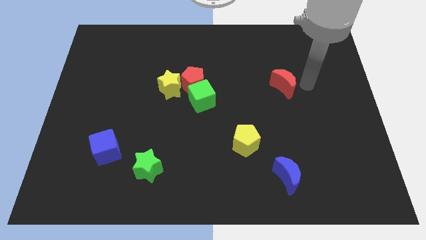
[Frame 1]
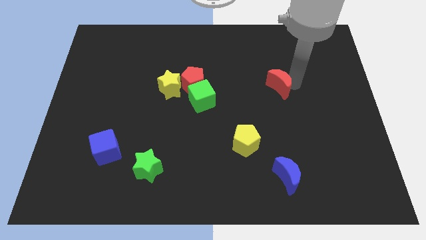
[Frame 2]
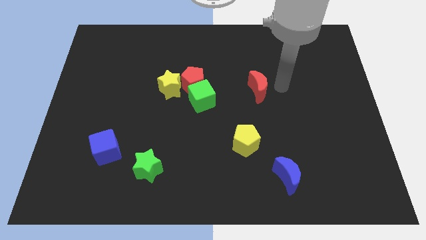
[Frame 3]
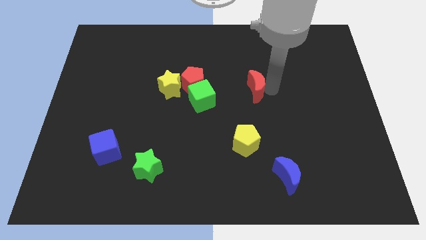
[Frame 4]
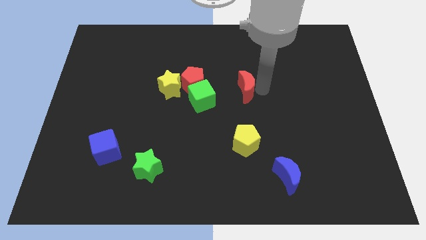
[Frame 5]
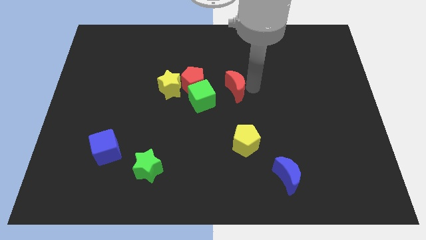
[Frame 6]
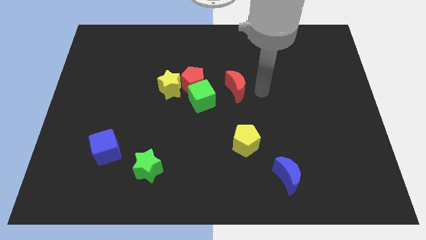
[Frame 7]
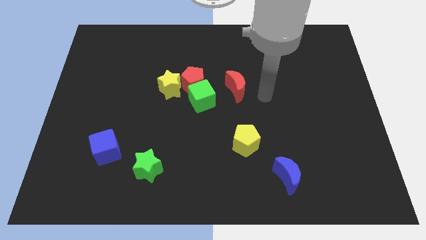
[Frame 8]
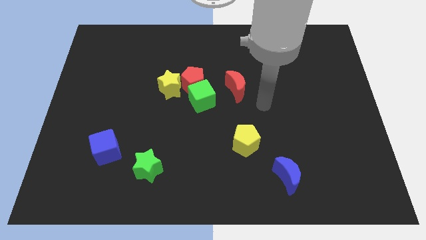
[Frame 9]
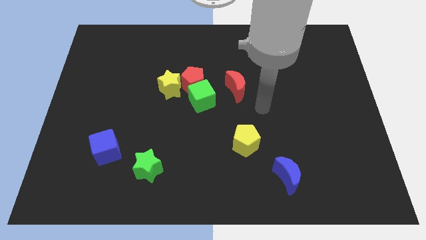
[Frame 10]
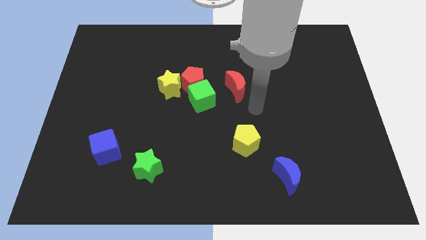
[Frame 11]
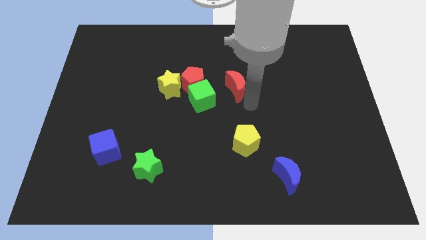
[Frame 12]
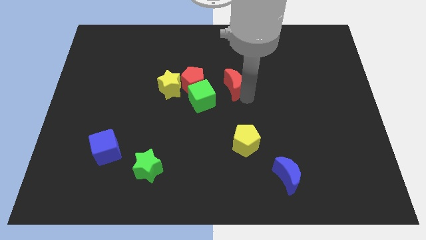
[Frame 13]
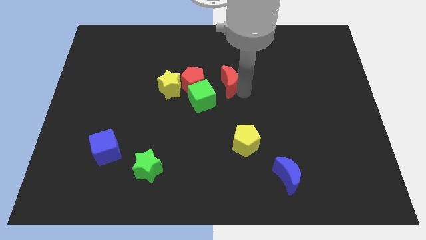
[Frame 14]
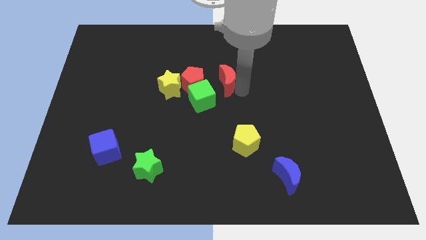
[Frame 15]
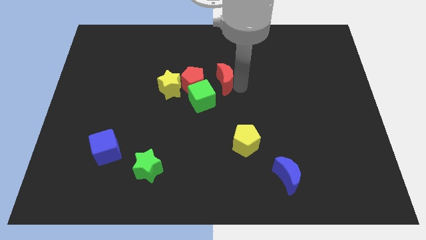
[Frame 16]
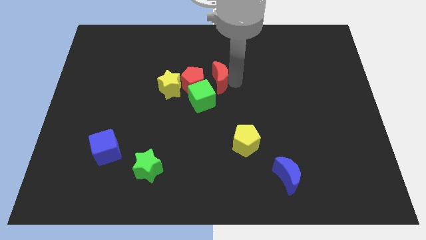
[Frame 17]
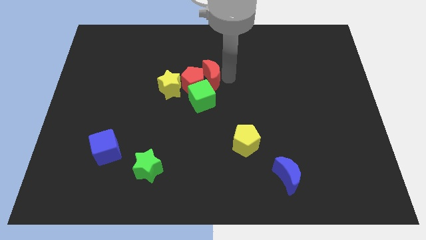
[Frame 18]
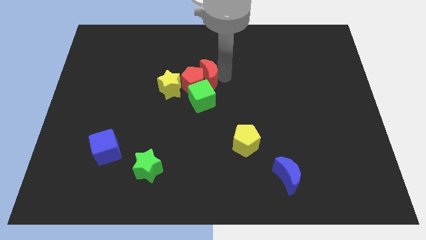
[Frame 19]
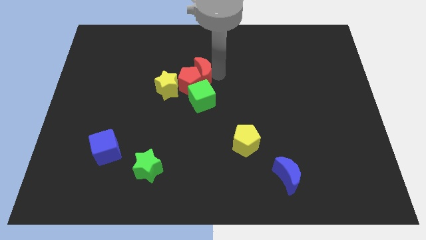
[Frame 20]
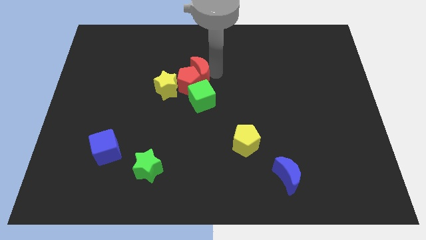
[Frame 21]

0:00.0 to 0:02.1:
move red moon right beside the red pentagon

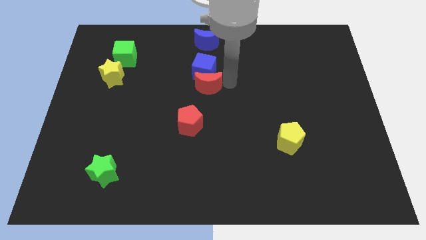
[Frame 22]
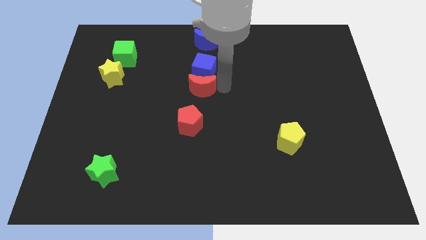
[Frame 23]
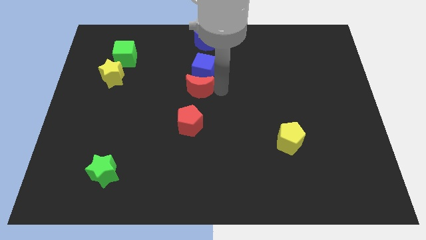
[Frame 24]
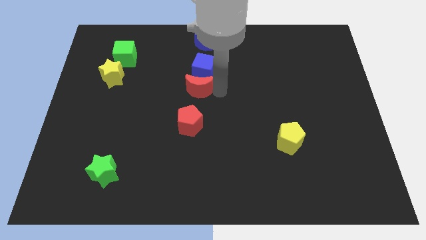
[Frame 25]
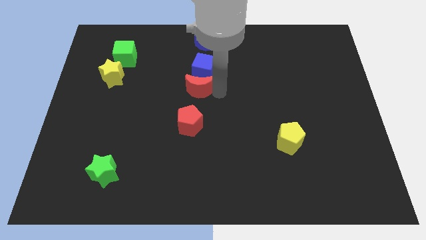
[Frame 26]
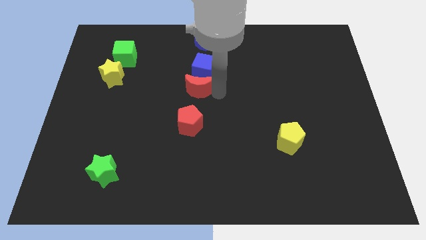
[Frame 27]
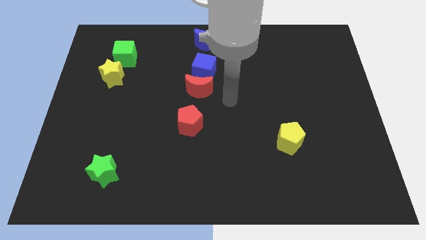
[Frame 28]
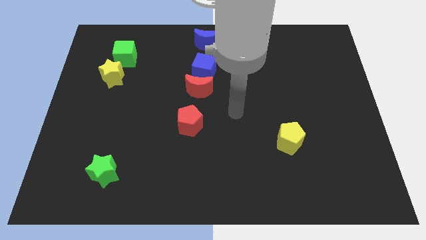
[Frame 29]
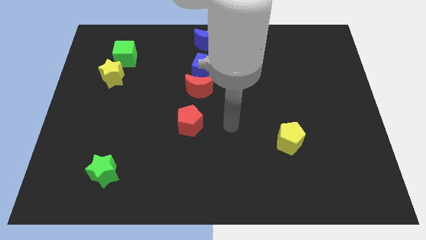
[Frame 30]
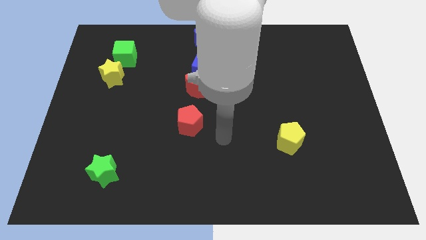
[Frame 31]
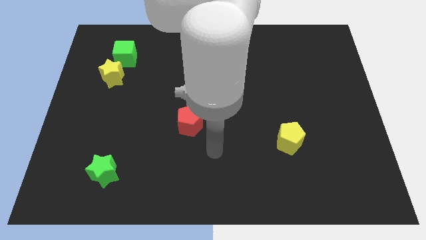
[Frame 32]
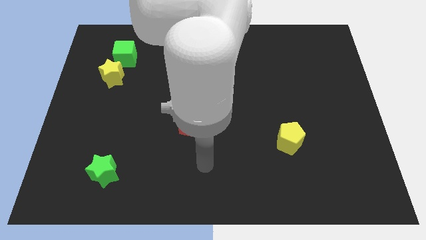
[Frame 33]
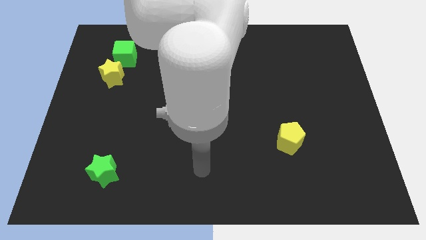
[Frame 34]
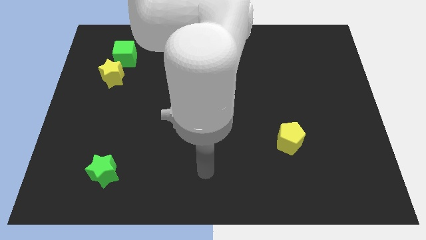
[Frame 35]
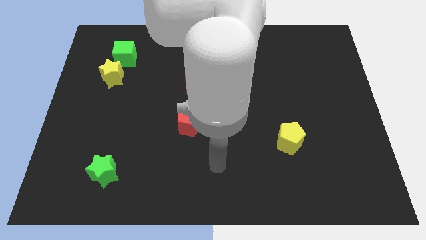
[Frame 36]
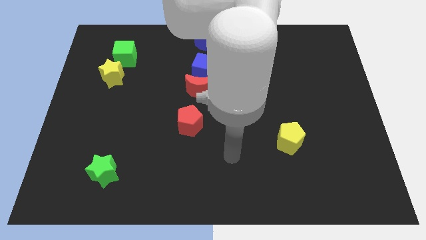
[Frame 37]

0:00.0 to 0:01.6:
move the red crescent slightly left side

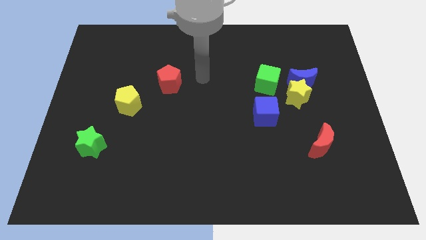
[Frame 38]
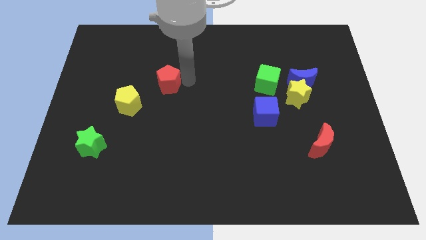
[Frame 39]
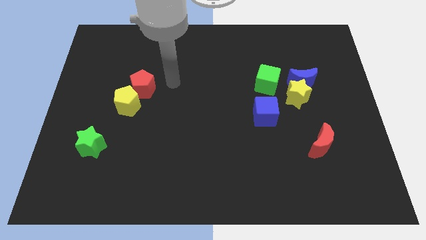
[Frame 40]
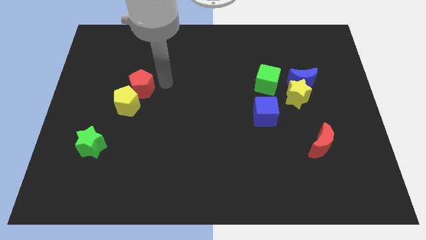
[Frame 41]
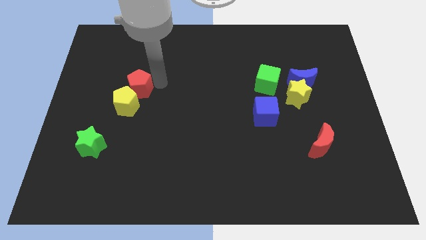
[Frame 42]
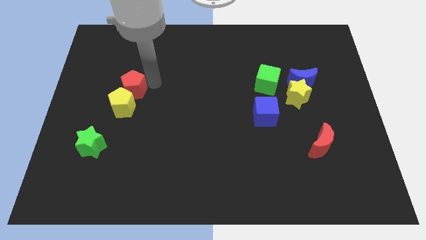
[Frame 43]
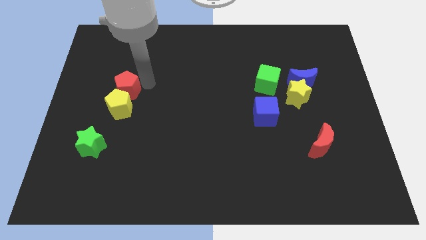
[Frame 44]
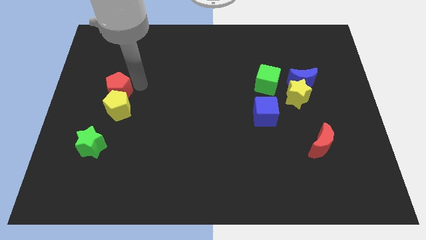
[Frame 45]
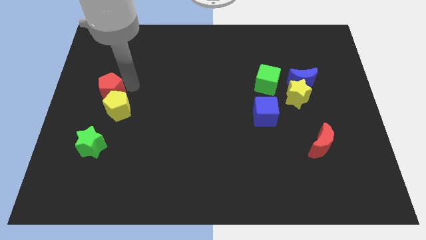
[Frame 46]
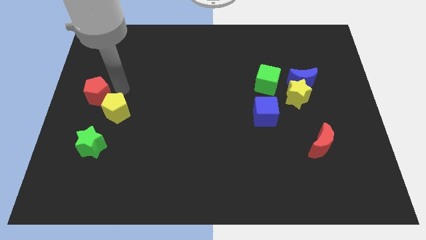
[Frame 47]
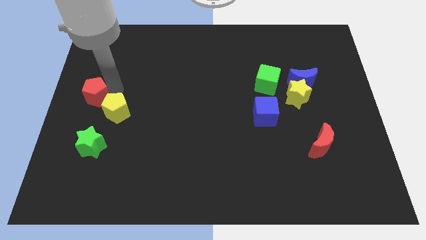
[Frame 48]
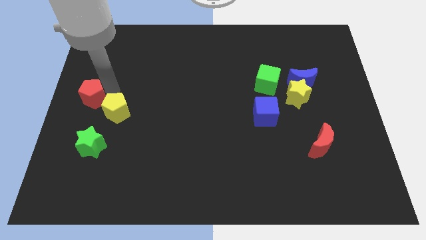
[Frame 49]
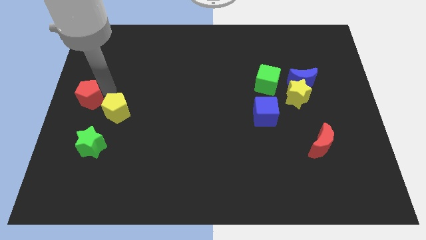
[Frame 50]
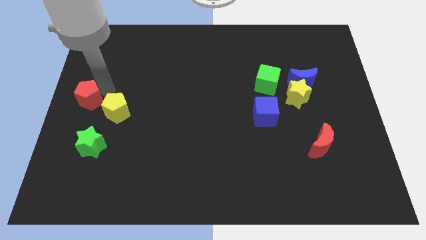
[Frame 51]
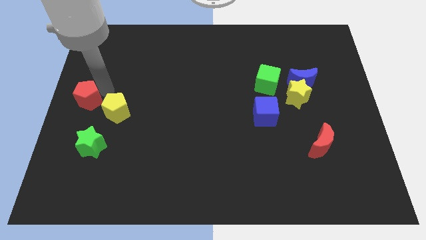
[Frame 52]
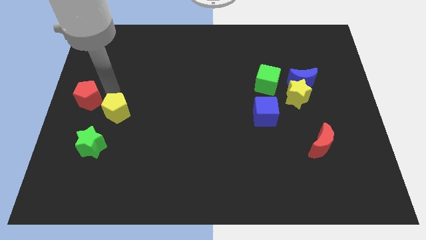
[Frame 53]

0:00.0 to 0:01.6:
move the red pentagon to the left of the yellow pentagon

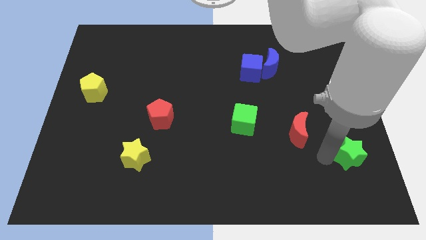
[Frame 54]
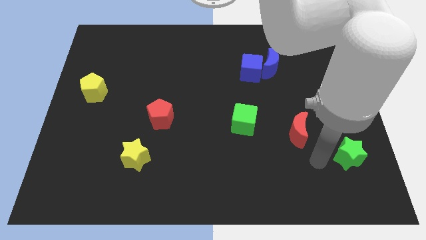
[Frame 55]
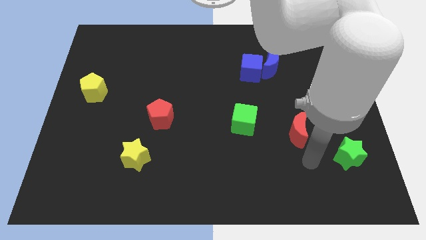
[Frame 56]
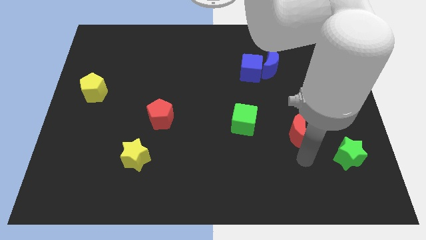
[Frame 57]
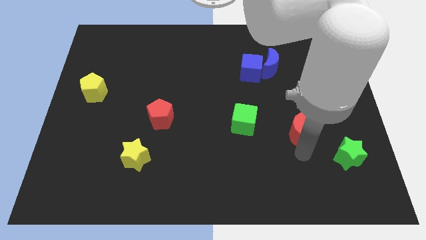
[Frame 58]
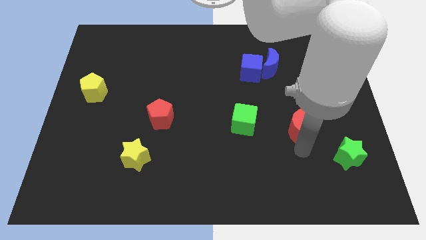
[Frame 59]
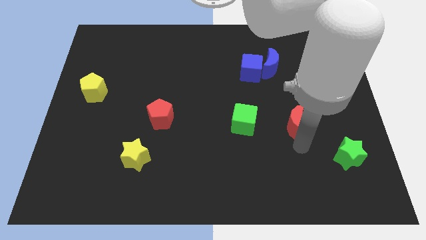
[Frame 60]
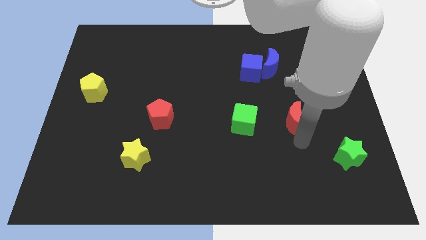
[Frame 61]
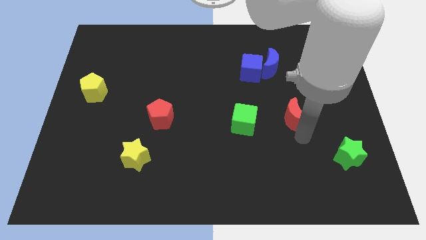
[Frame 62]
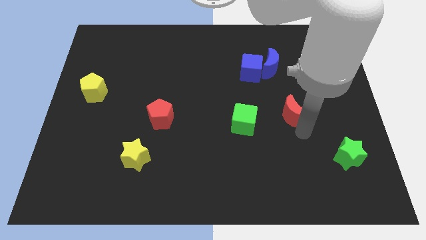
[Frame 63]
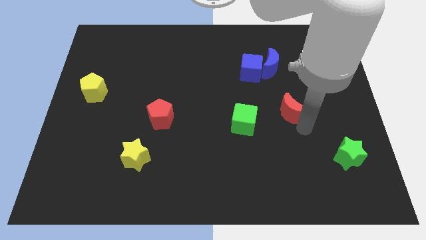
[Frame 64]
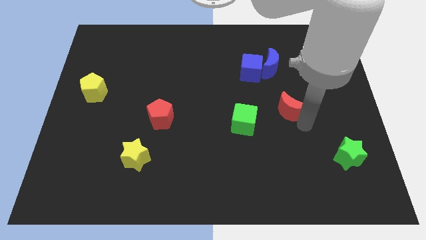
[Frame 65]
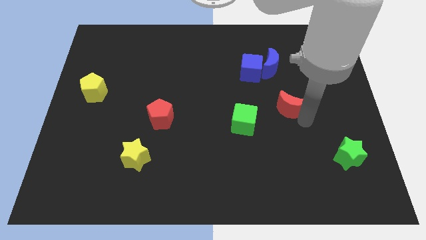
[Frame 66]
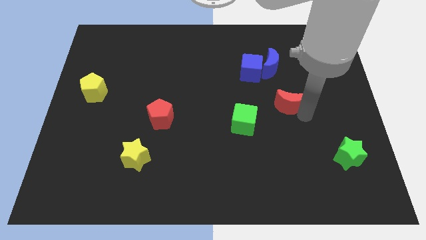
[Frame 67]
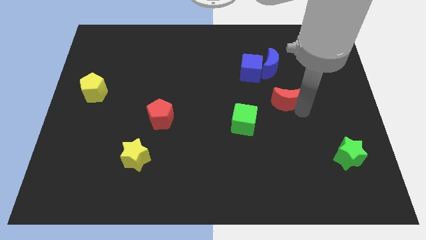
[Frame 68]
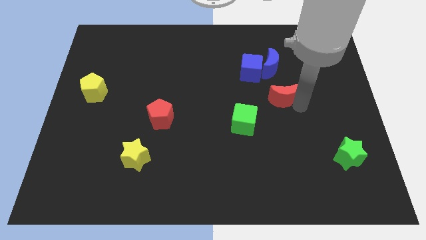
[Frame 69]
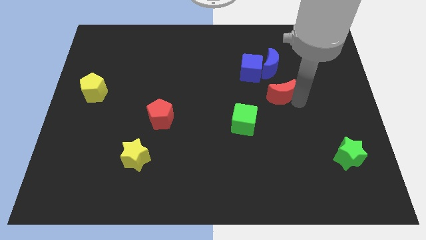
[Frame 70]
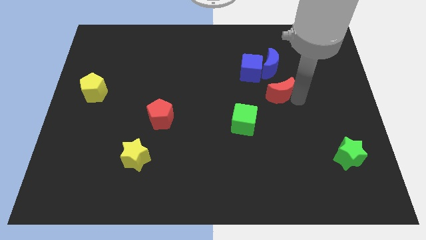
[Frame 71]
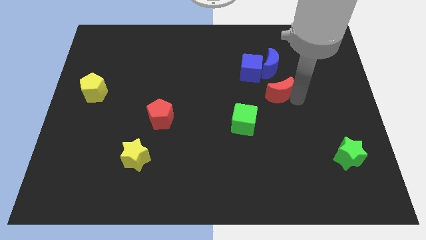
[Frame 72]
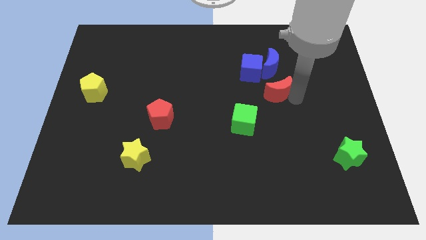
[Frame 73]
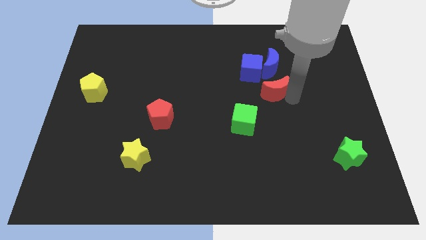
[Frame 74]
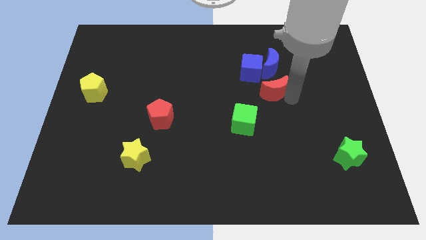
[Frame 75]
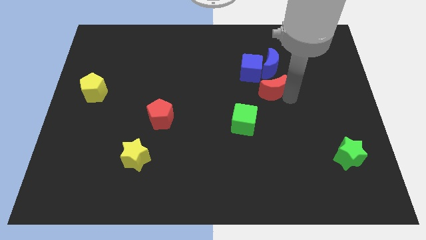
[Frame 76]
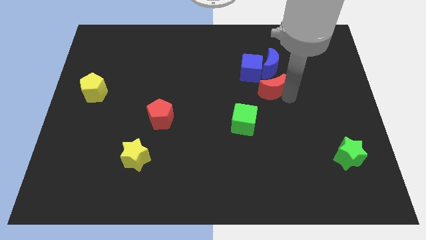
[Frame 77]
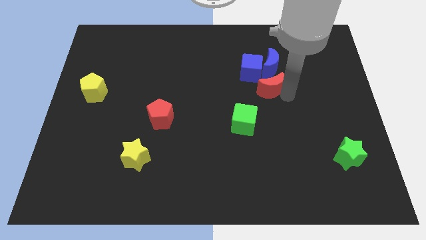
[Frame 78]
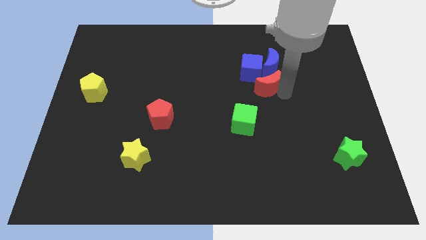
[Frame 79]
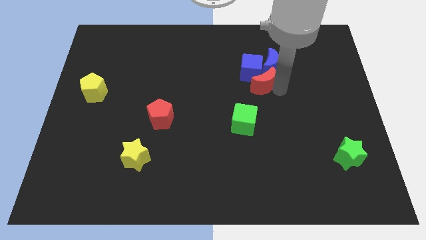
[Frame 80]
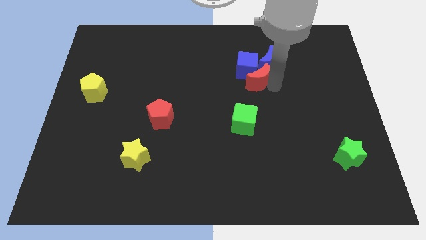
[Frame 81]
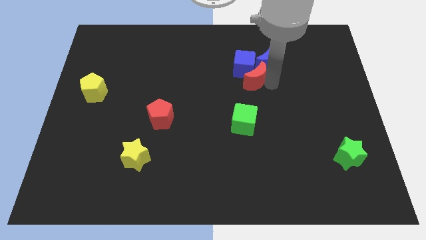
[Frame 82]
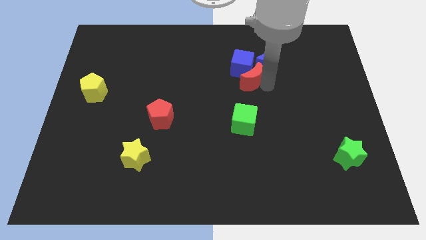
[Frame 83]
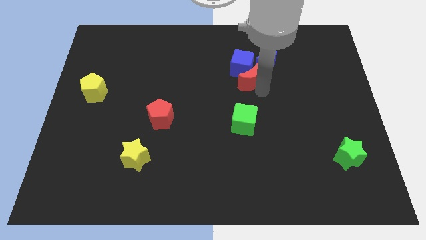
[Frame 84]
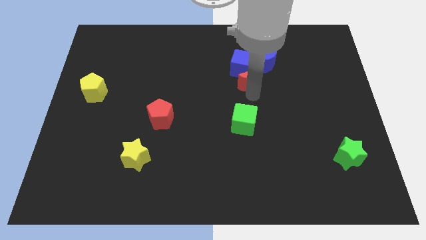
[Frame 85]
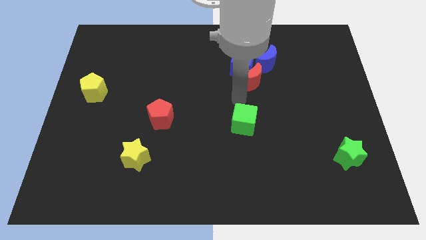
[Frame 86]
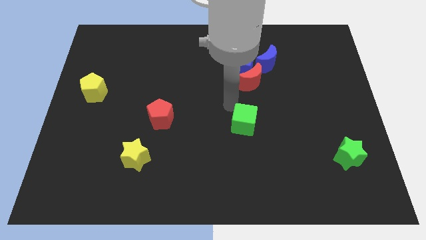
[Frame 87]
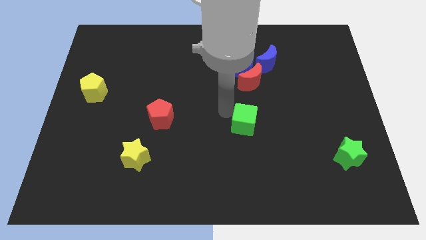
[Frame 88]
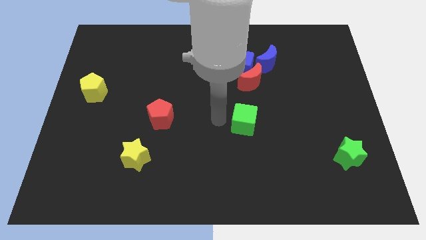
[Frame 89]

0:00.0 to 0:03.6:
move the red crescent into the blue blocks
